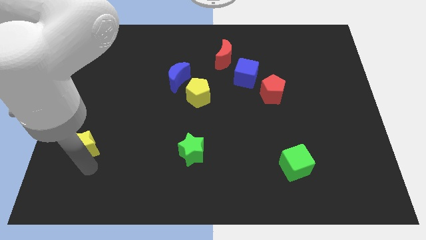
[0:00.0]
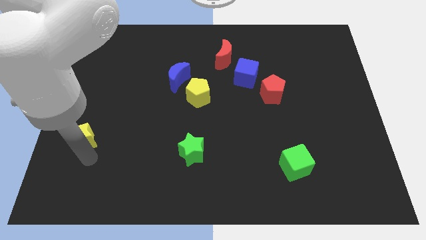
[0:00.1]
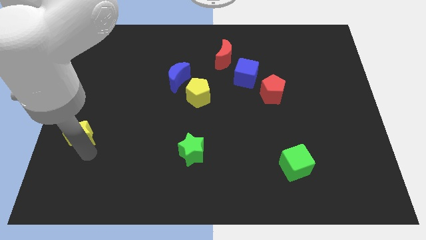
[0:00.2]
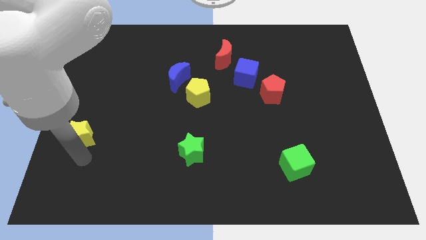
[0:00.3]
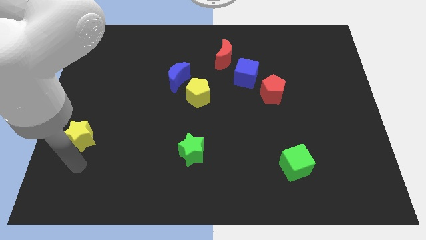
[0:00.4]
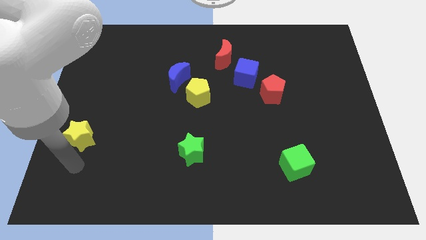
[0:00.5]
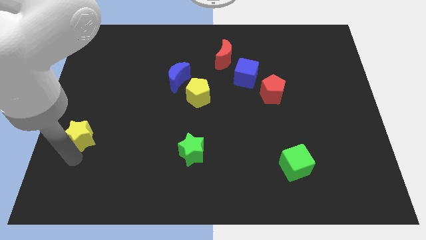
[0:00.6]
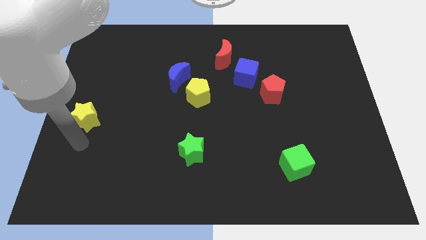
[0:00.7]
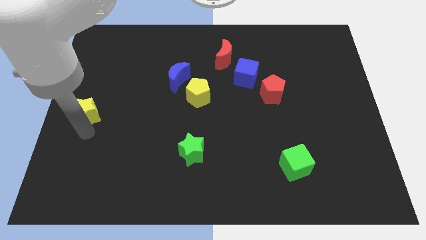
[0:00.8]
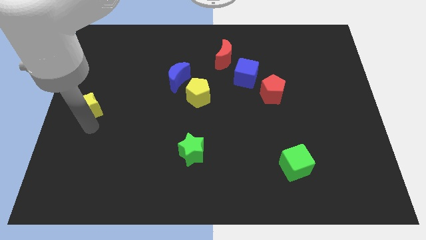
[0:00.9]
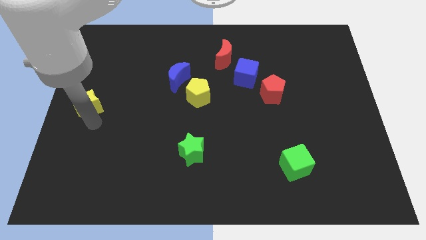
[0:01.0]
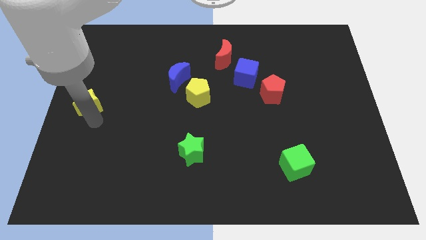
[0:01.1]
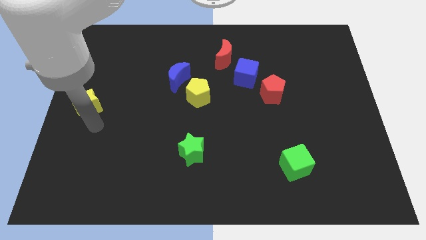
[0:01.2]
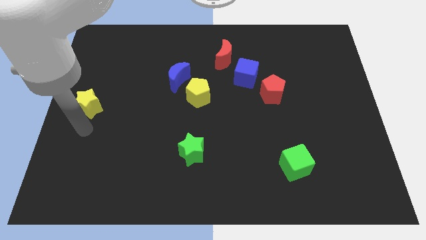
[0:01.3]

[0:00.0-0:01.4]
move the yellow star towards the left center of the board

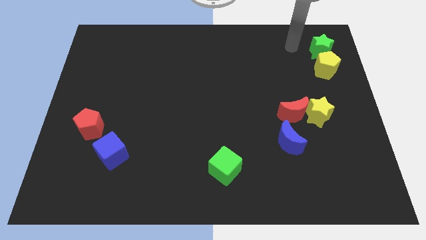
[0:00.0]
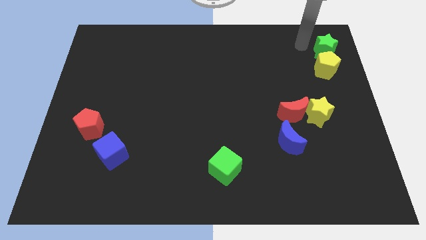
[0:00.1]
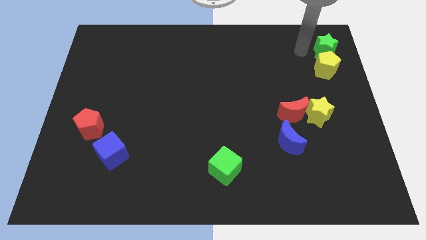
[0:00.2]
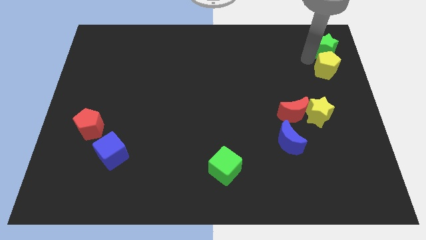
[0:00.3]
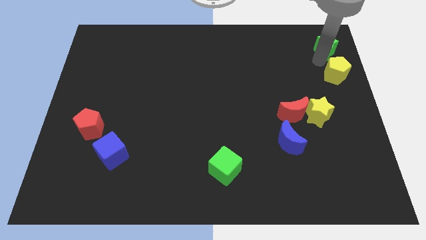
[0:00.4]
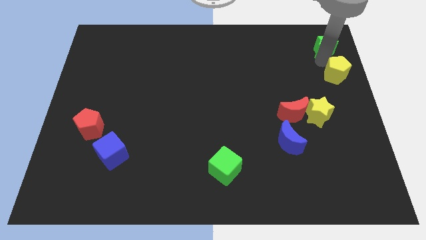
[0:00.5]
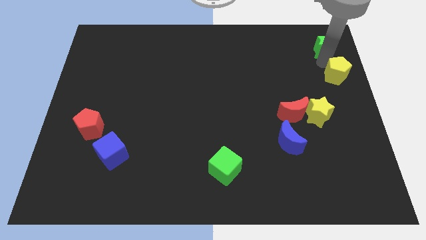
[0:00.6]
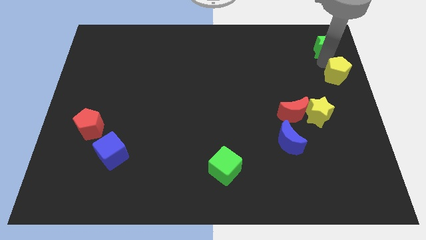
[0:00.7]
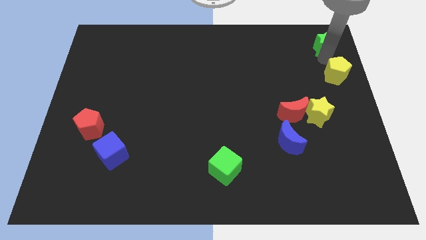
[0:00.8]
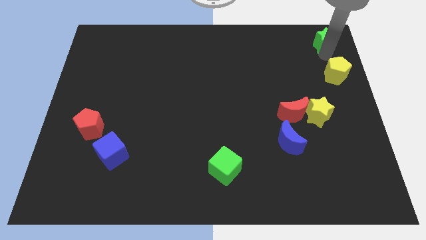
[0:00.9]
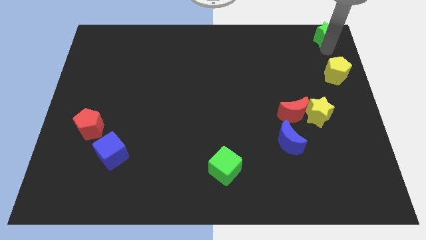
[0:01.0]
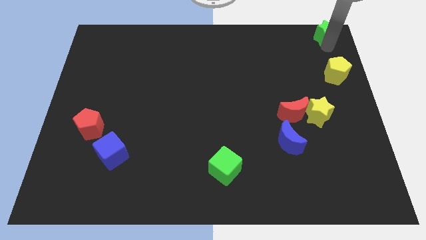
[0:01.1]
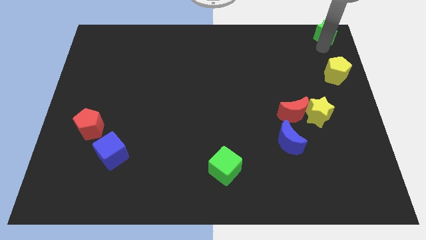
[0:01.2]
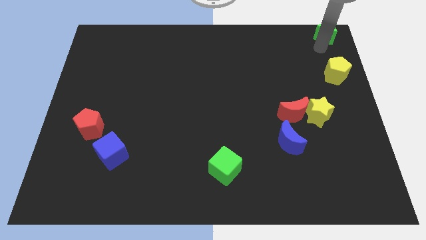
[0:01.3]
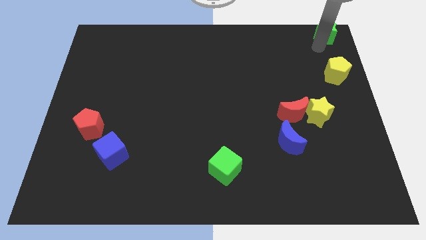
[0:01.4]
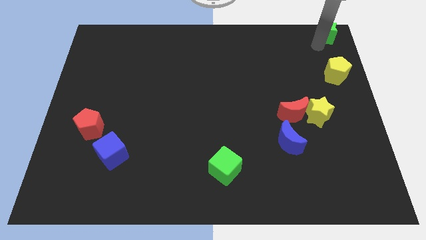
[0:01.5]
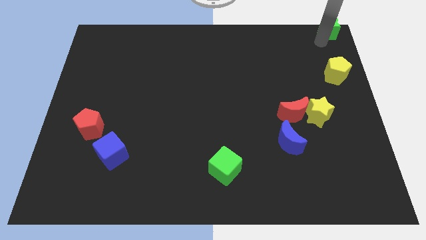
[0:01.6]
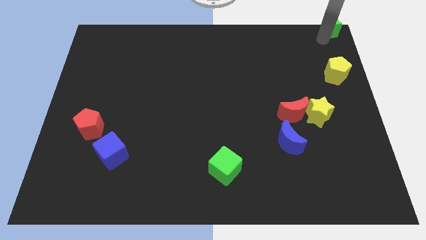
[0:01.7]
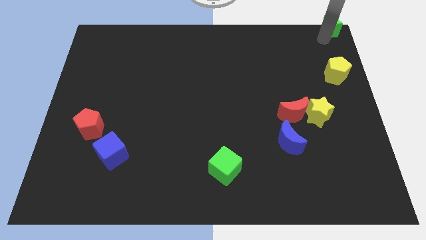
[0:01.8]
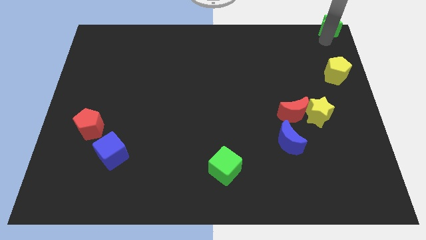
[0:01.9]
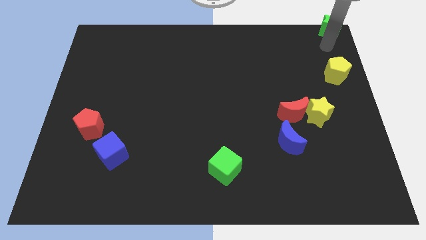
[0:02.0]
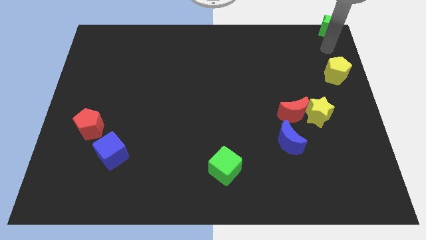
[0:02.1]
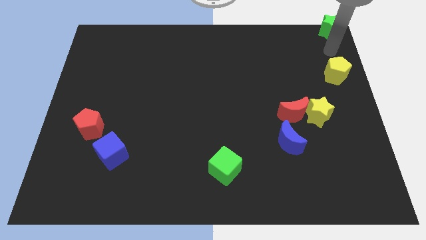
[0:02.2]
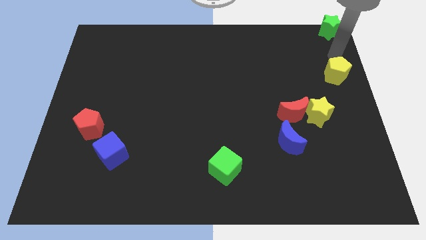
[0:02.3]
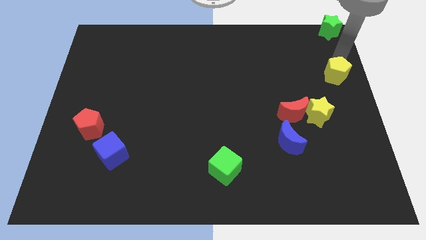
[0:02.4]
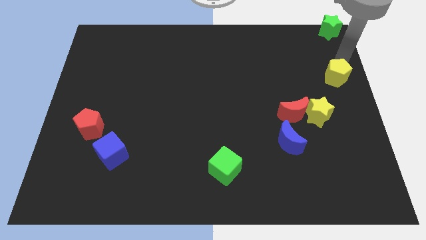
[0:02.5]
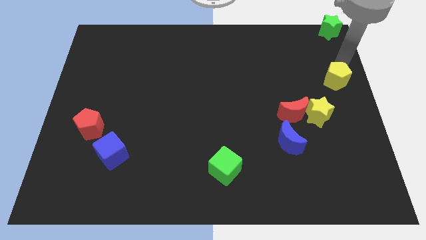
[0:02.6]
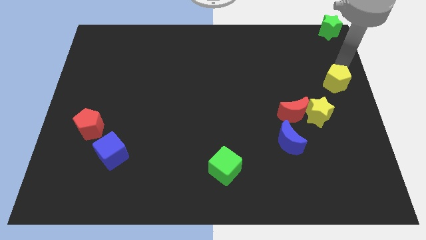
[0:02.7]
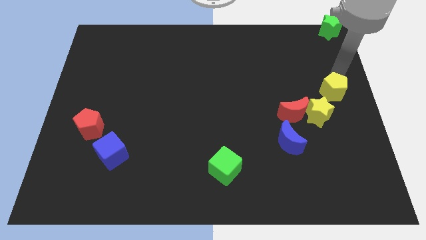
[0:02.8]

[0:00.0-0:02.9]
separate green star and yellow pentagon

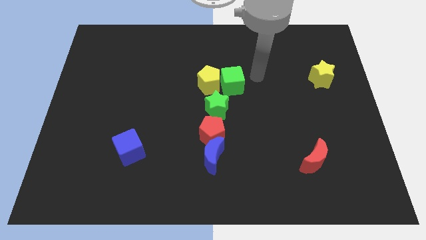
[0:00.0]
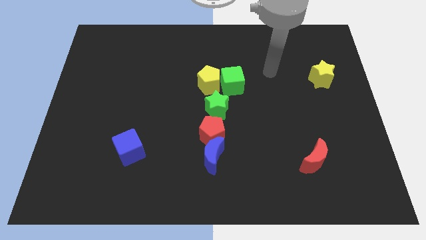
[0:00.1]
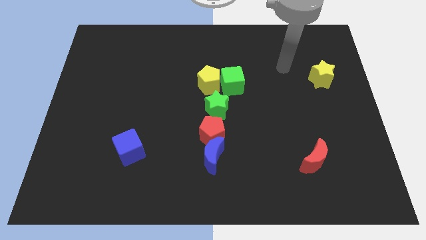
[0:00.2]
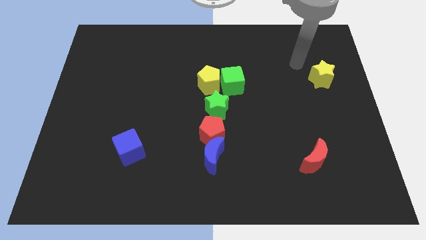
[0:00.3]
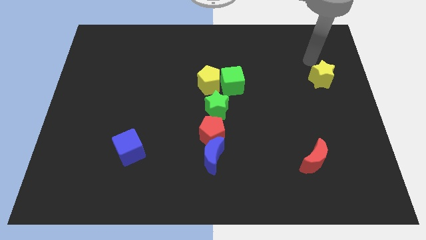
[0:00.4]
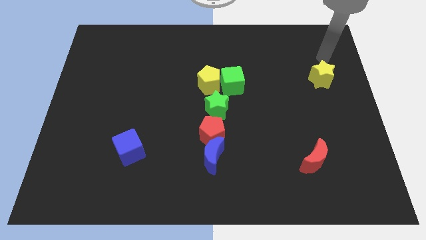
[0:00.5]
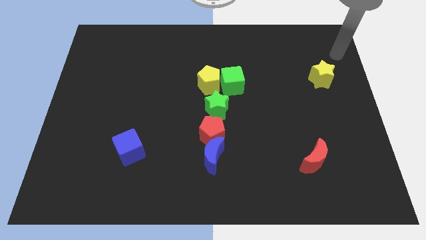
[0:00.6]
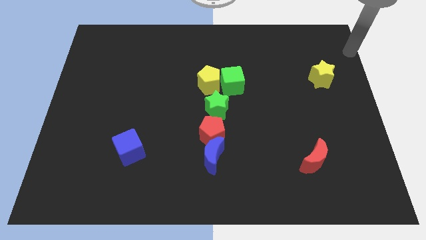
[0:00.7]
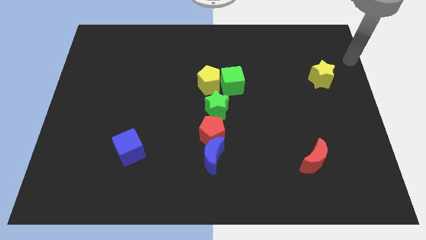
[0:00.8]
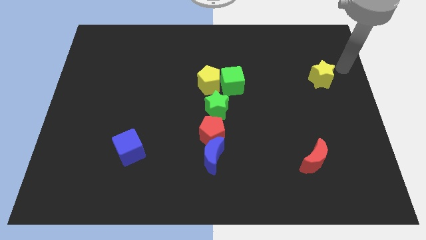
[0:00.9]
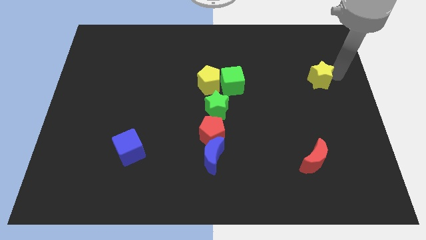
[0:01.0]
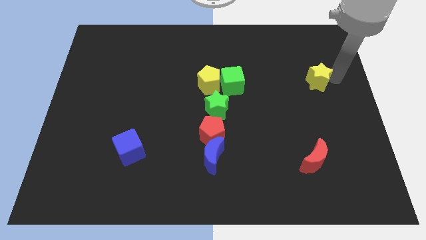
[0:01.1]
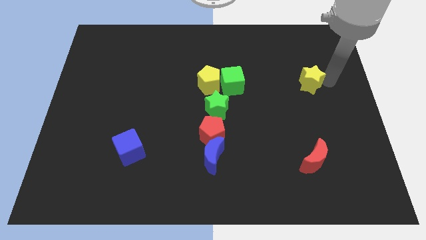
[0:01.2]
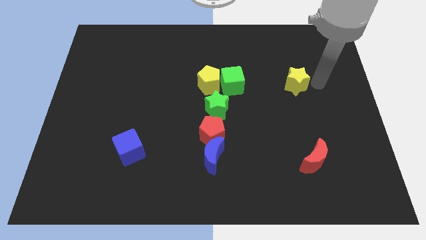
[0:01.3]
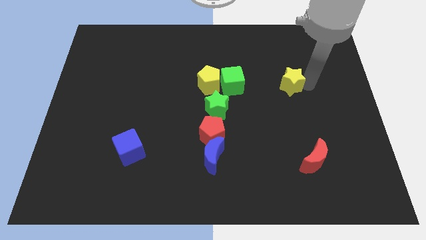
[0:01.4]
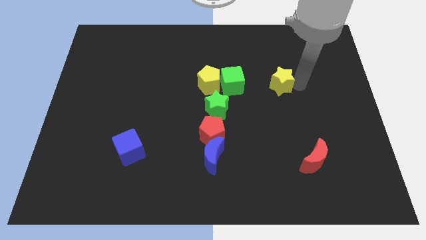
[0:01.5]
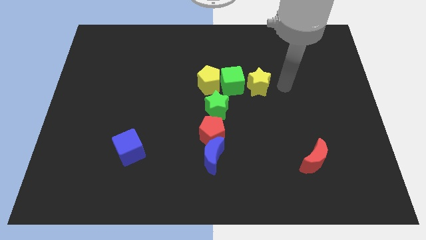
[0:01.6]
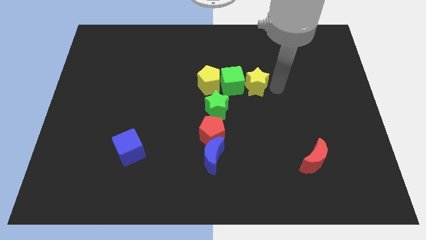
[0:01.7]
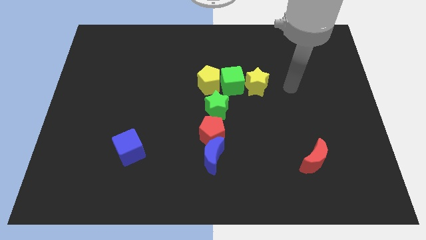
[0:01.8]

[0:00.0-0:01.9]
drag the yellow star to the right of the green cube

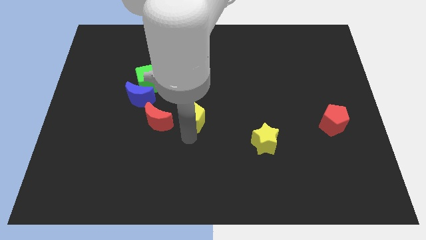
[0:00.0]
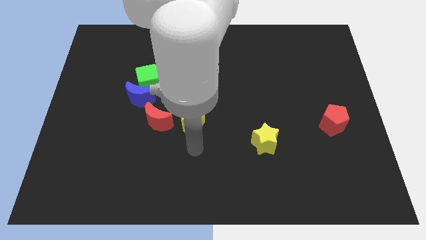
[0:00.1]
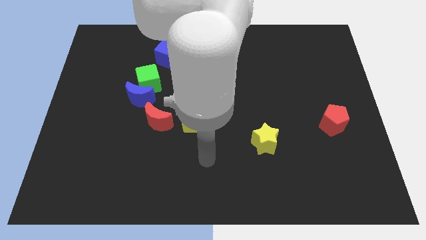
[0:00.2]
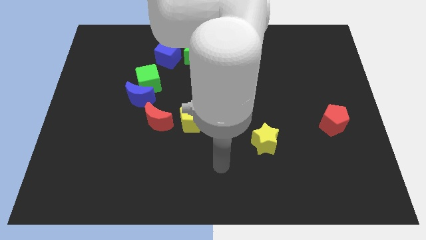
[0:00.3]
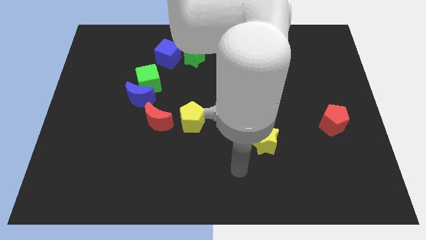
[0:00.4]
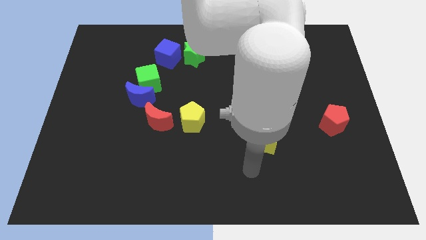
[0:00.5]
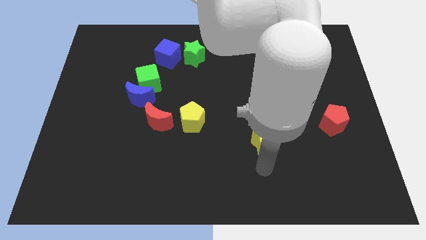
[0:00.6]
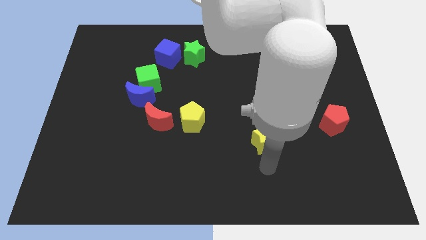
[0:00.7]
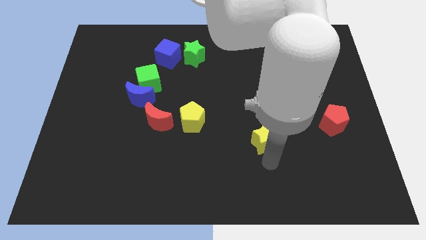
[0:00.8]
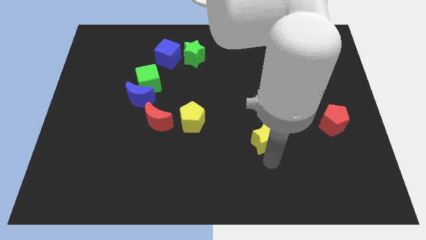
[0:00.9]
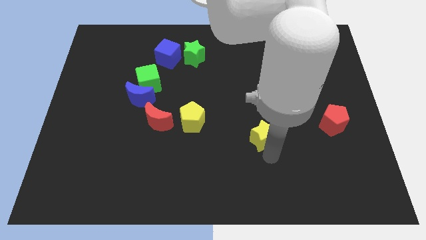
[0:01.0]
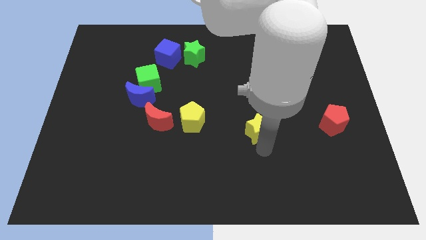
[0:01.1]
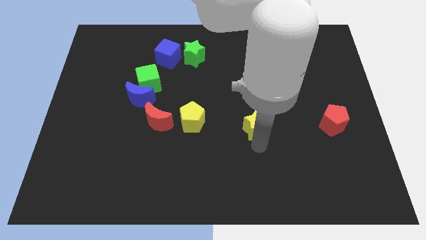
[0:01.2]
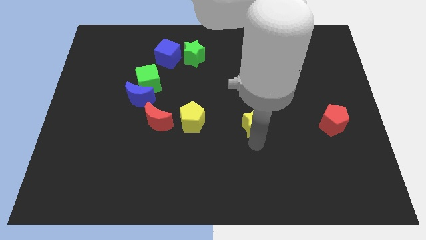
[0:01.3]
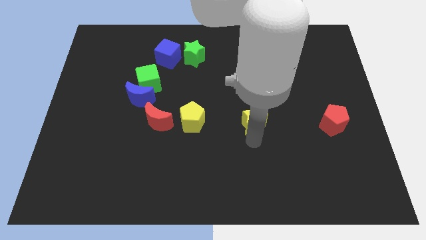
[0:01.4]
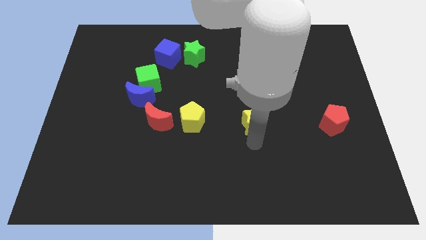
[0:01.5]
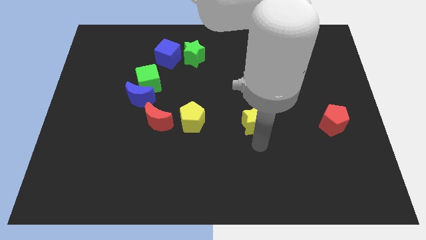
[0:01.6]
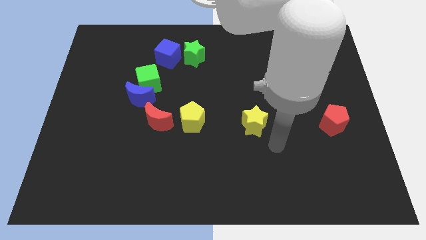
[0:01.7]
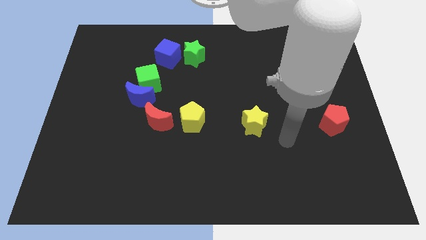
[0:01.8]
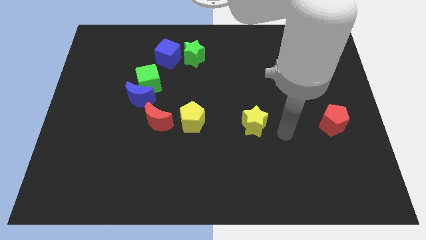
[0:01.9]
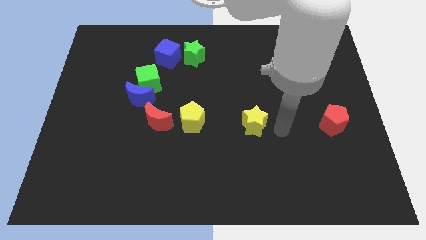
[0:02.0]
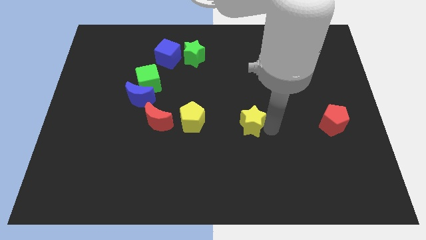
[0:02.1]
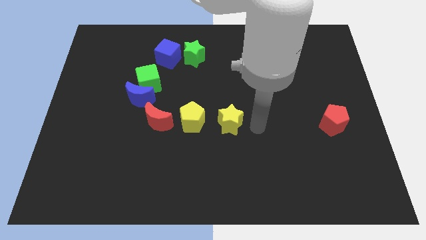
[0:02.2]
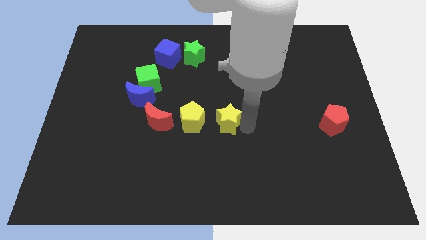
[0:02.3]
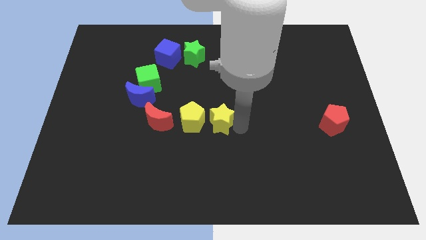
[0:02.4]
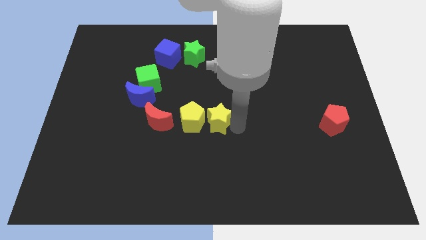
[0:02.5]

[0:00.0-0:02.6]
move the yellow star to the right of the yellow pentagon

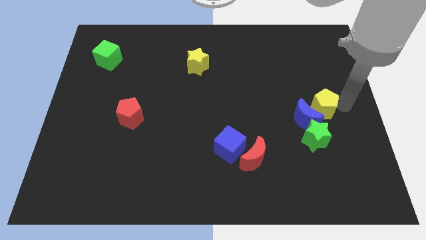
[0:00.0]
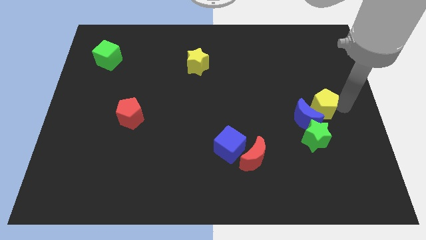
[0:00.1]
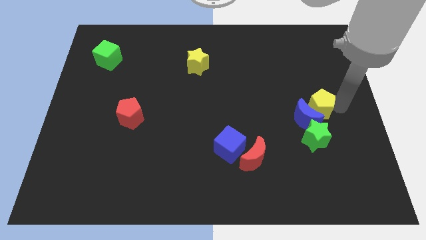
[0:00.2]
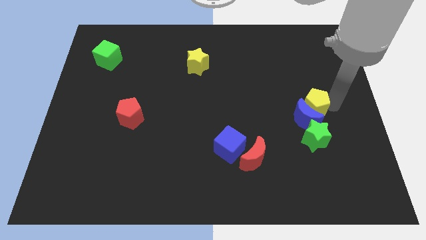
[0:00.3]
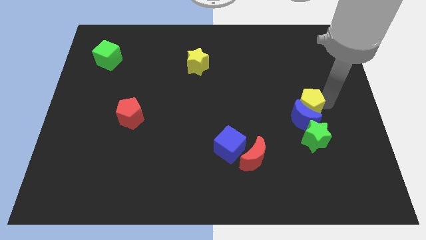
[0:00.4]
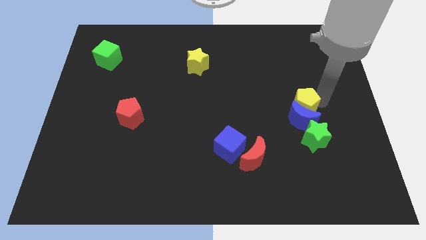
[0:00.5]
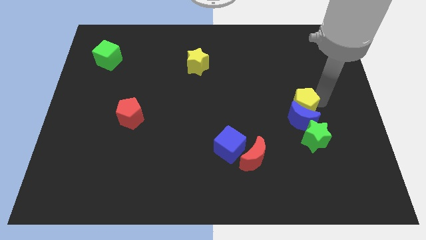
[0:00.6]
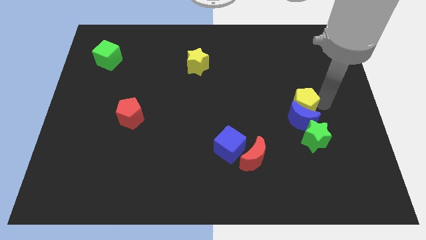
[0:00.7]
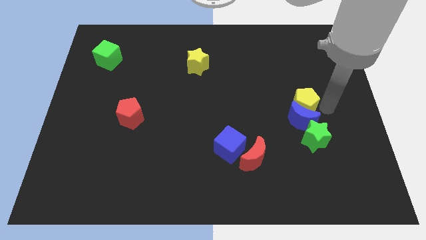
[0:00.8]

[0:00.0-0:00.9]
push yellow pentagon in to blue crescent
